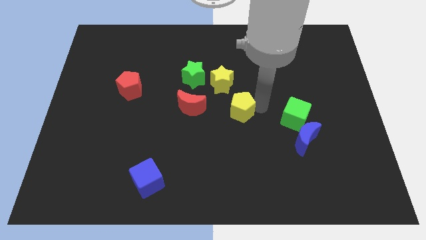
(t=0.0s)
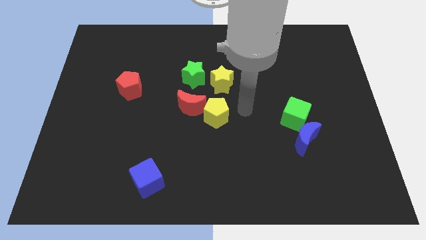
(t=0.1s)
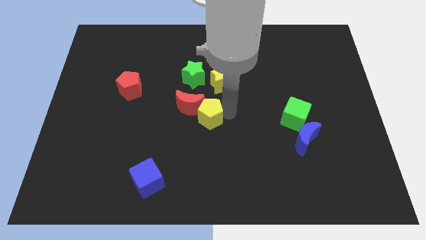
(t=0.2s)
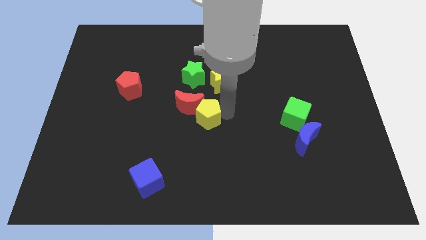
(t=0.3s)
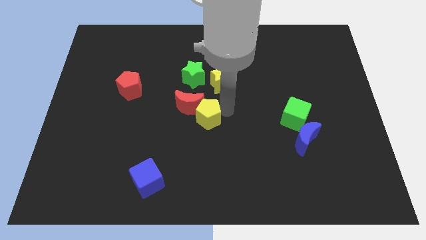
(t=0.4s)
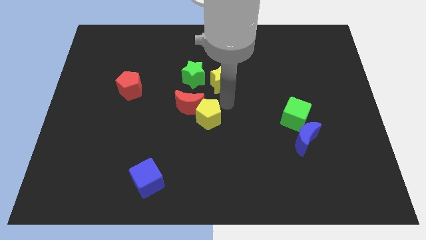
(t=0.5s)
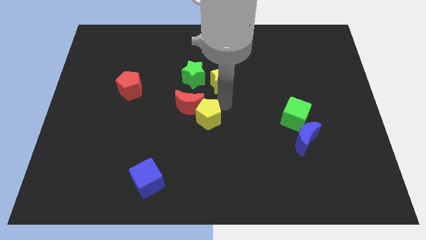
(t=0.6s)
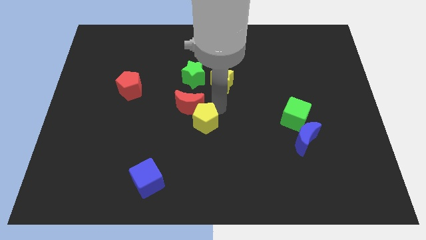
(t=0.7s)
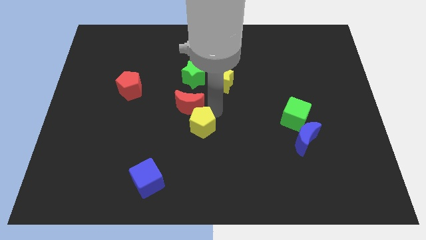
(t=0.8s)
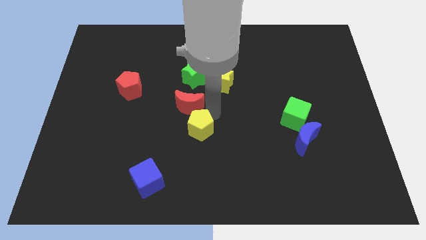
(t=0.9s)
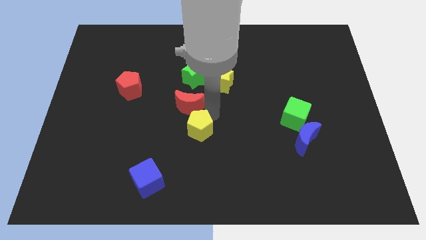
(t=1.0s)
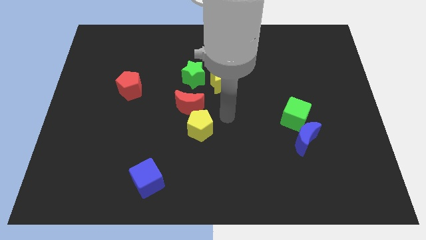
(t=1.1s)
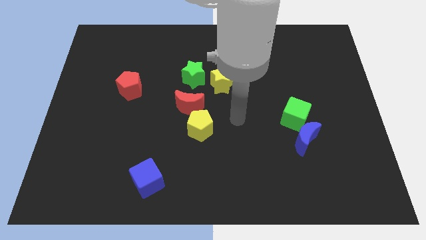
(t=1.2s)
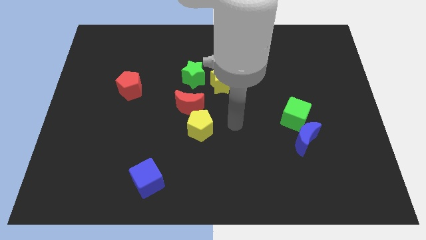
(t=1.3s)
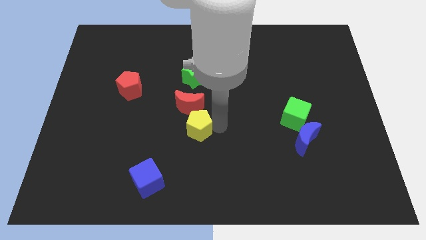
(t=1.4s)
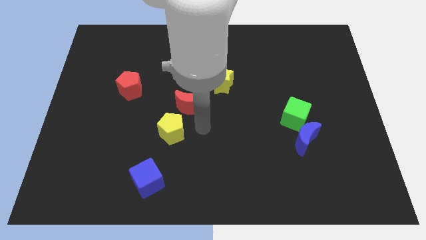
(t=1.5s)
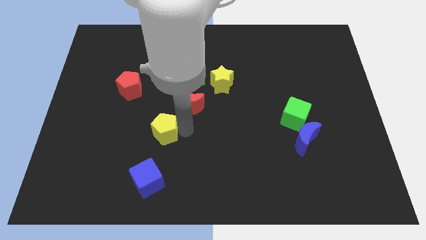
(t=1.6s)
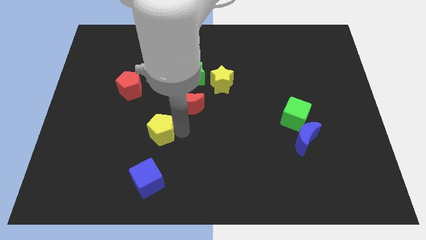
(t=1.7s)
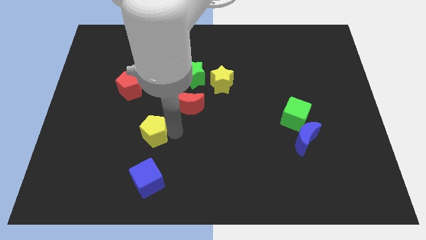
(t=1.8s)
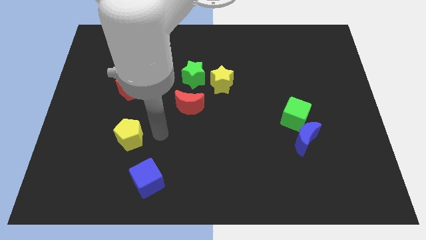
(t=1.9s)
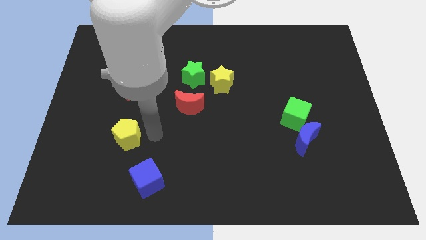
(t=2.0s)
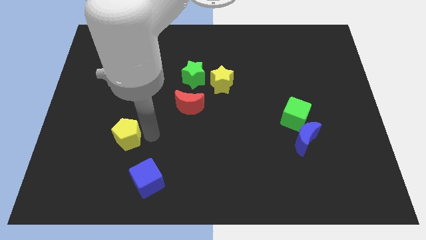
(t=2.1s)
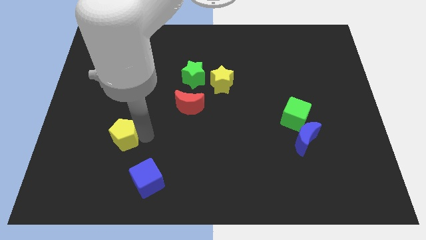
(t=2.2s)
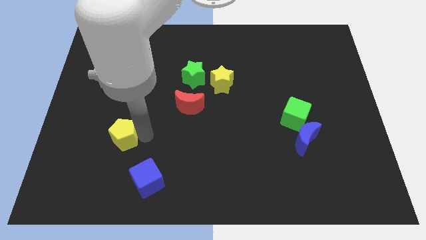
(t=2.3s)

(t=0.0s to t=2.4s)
move the yellow pentagon diagonal to the blue cube

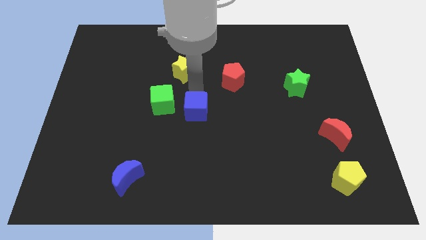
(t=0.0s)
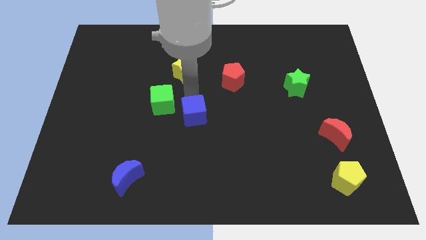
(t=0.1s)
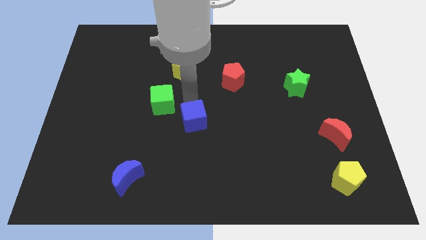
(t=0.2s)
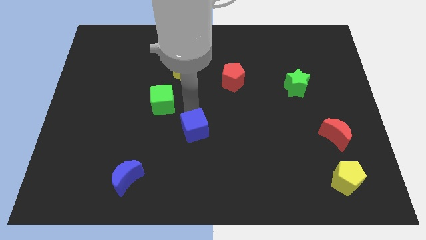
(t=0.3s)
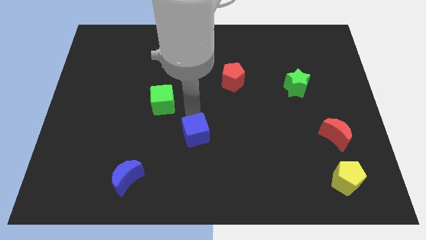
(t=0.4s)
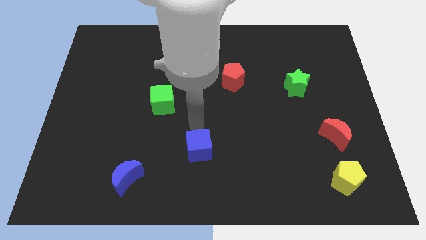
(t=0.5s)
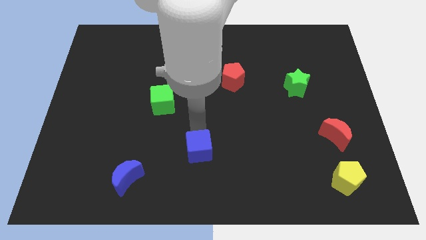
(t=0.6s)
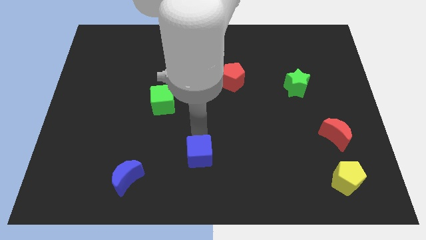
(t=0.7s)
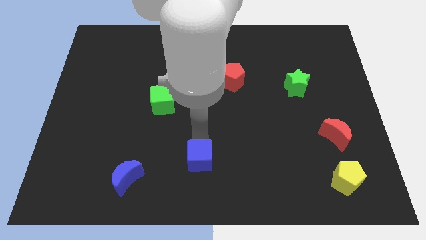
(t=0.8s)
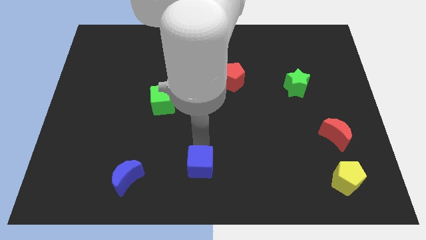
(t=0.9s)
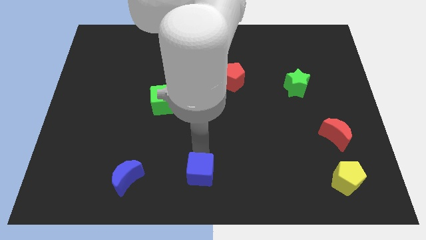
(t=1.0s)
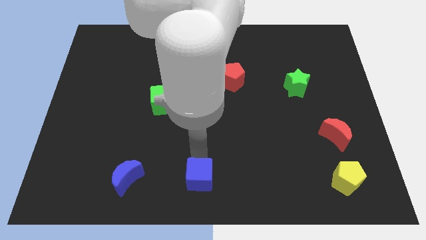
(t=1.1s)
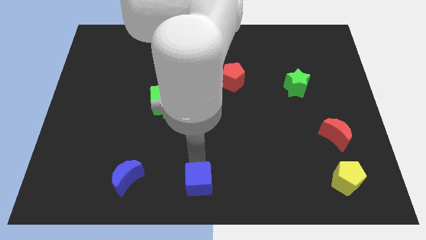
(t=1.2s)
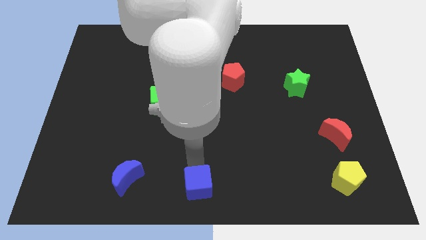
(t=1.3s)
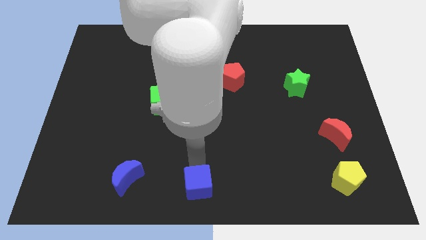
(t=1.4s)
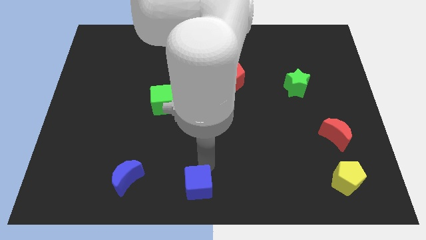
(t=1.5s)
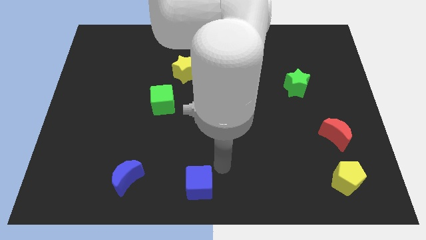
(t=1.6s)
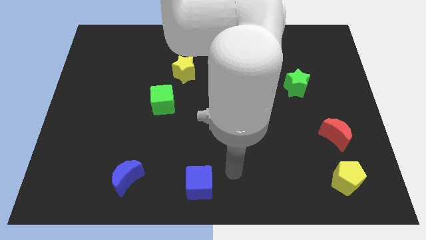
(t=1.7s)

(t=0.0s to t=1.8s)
move the blue cube to the bottom centre of the board

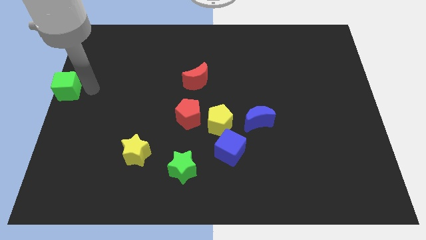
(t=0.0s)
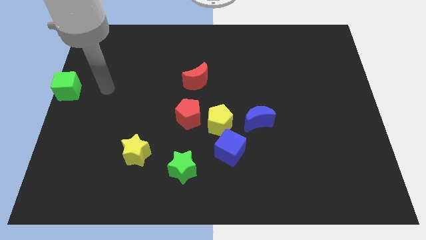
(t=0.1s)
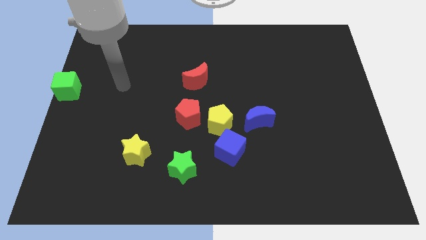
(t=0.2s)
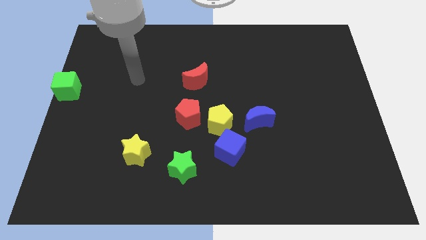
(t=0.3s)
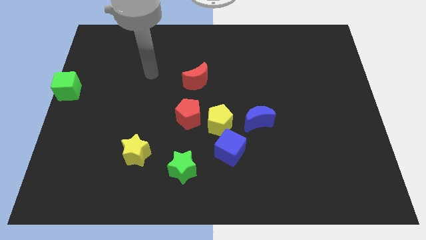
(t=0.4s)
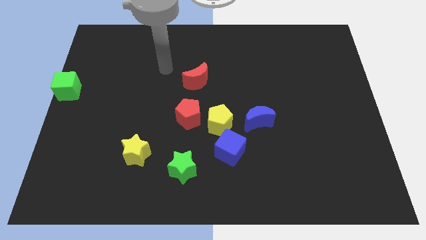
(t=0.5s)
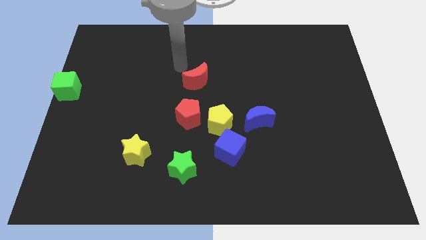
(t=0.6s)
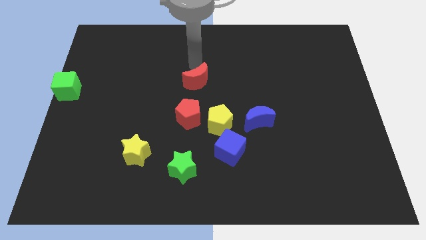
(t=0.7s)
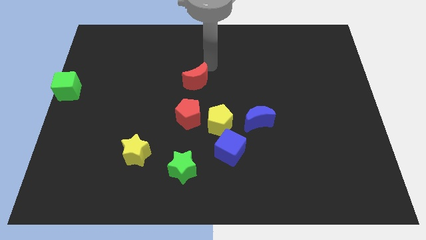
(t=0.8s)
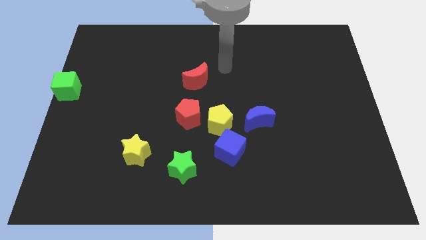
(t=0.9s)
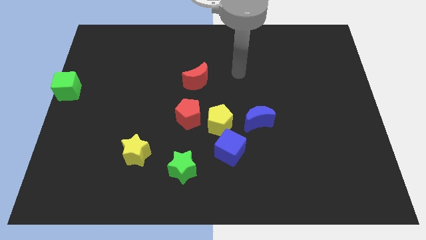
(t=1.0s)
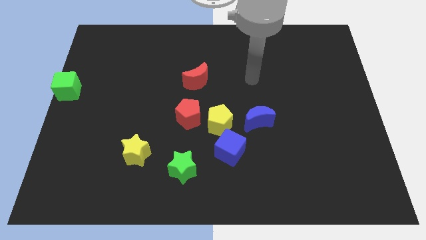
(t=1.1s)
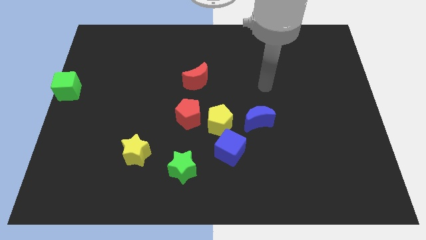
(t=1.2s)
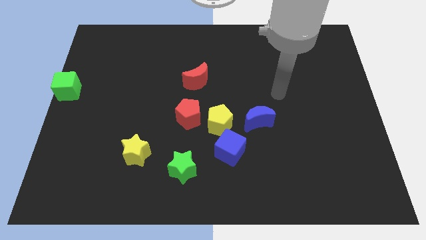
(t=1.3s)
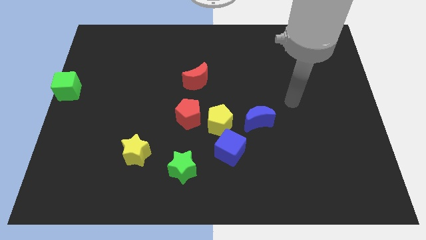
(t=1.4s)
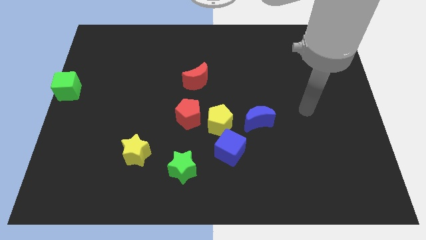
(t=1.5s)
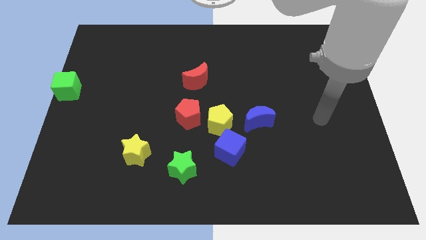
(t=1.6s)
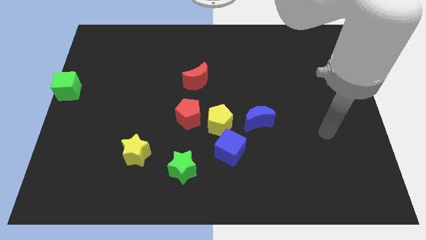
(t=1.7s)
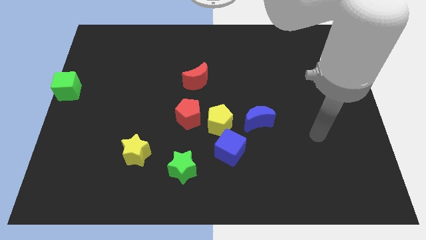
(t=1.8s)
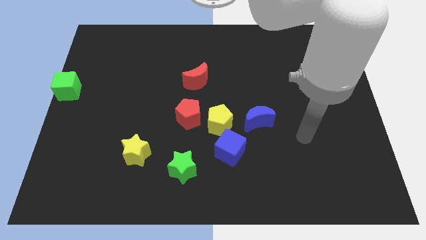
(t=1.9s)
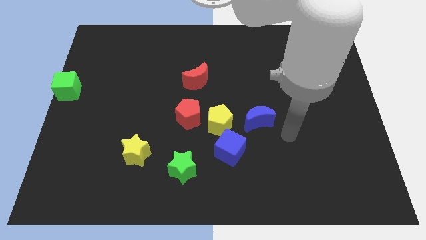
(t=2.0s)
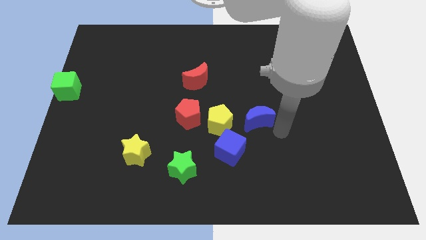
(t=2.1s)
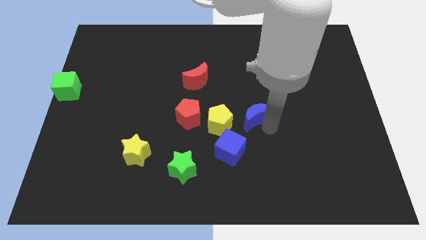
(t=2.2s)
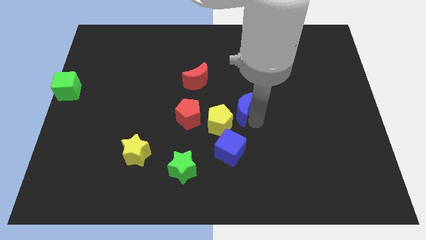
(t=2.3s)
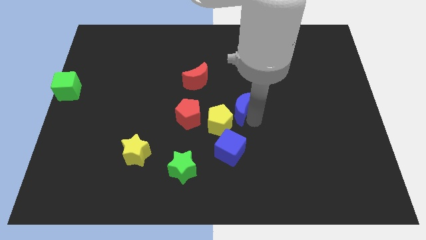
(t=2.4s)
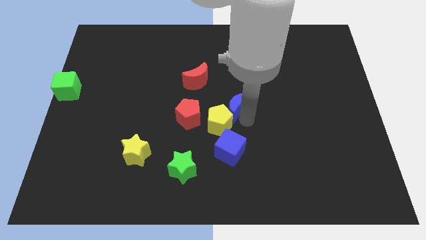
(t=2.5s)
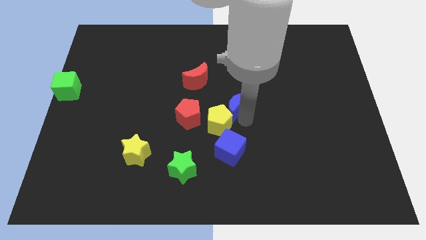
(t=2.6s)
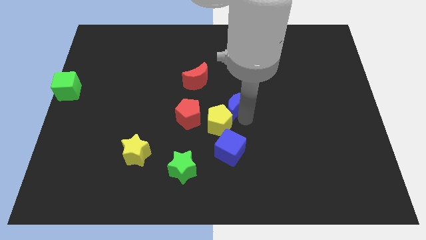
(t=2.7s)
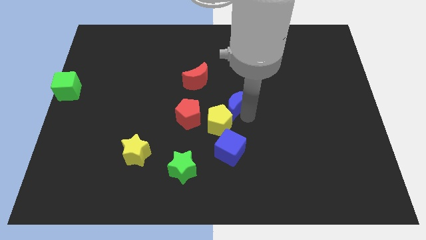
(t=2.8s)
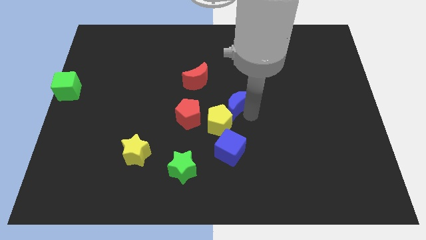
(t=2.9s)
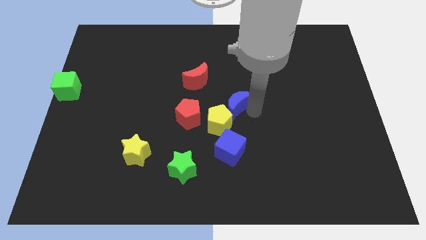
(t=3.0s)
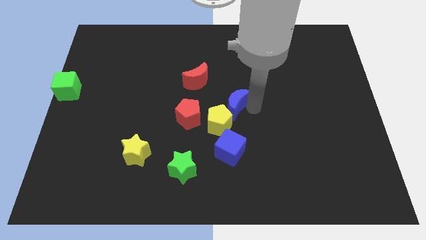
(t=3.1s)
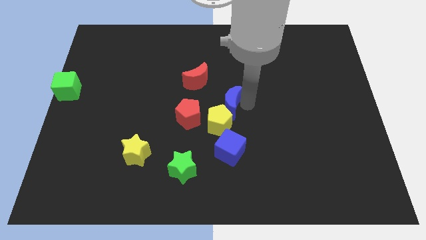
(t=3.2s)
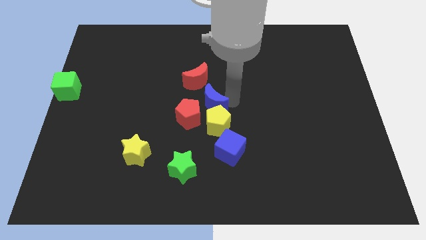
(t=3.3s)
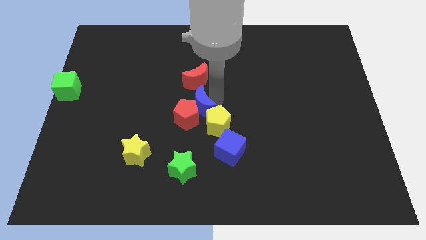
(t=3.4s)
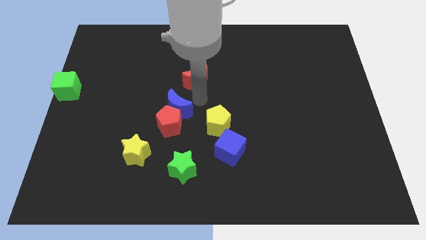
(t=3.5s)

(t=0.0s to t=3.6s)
move the blue crescent to the top of the red pentagon

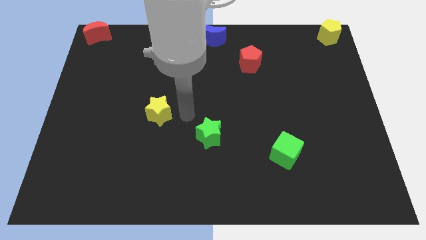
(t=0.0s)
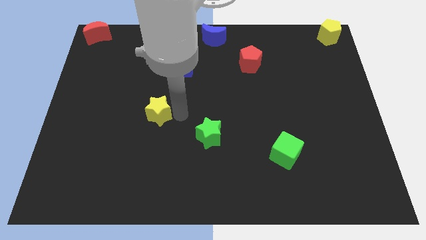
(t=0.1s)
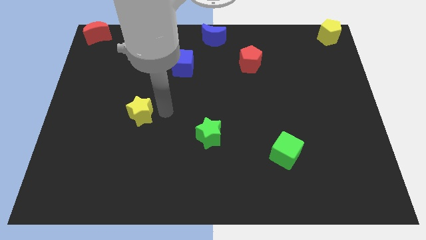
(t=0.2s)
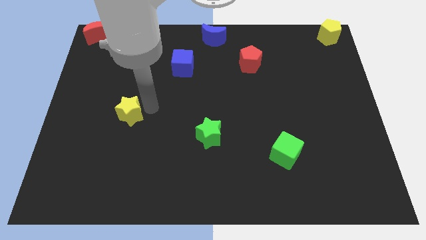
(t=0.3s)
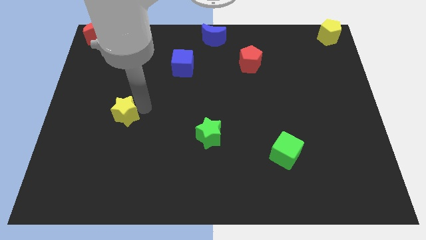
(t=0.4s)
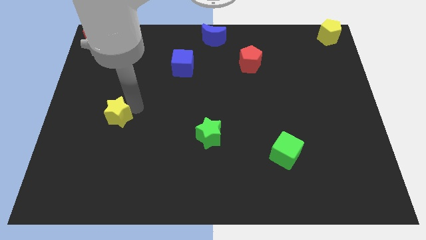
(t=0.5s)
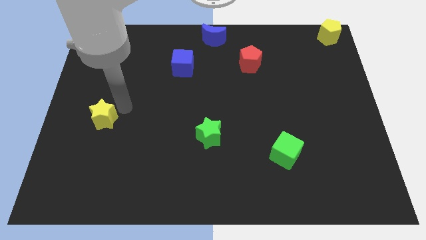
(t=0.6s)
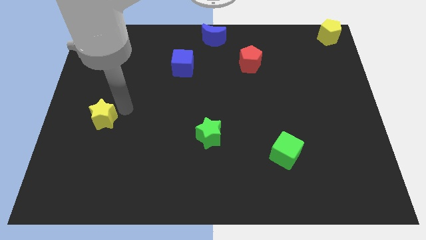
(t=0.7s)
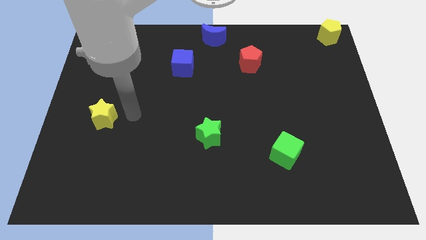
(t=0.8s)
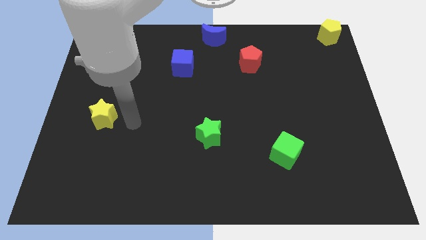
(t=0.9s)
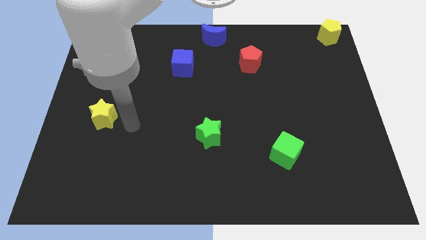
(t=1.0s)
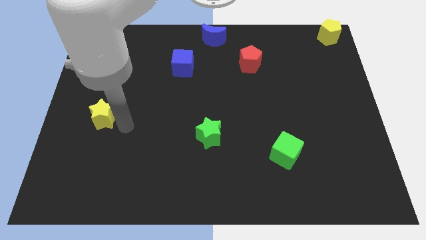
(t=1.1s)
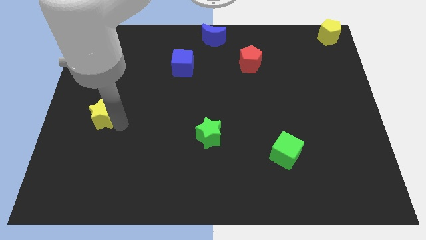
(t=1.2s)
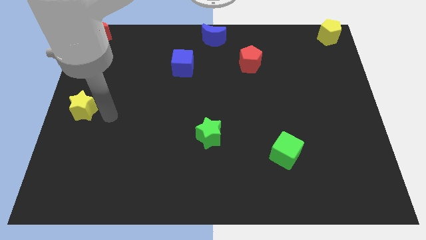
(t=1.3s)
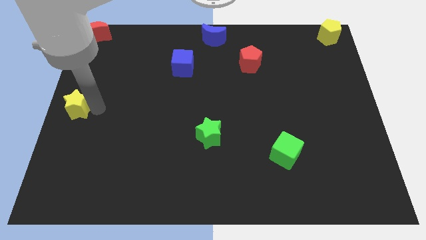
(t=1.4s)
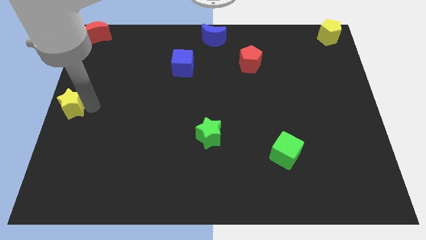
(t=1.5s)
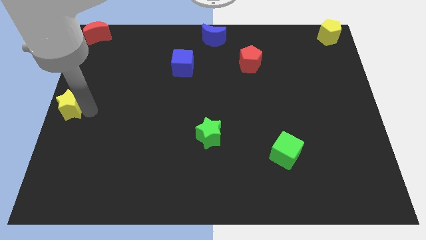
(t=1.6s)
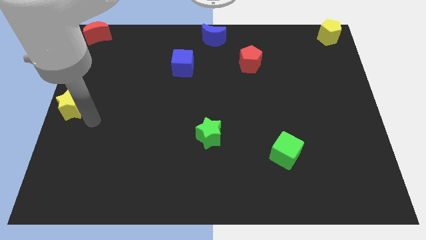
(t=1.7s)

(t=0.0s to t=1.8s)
move the yellow star to the center left of the board
